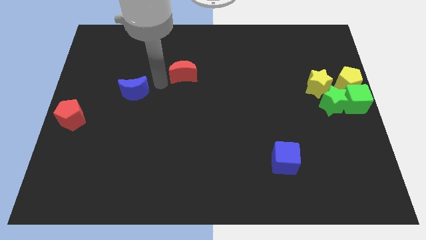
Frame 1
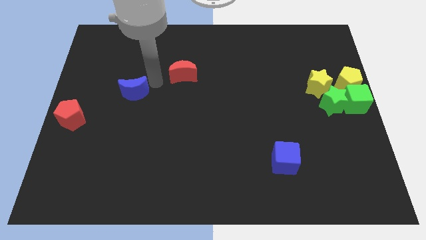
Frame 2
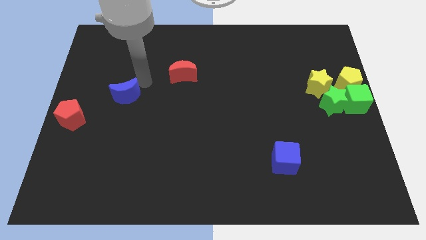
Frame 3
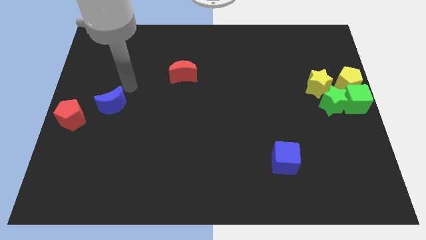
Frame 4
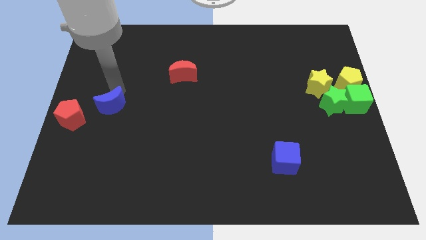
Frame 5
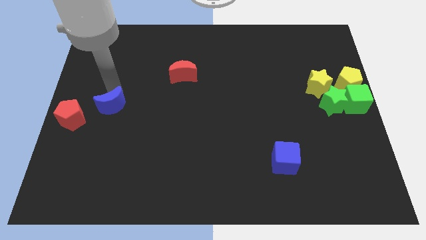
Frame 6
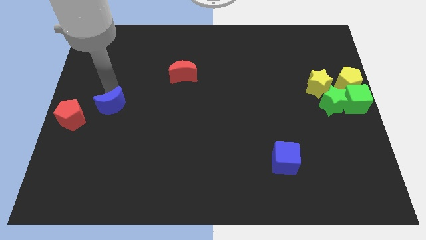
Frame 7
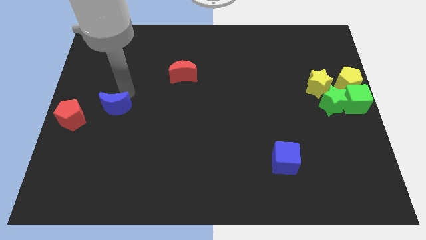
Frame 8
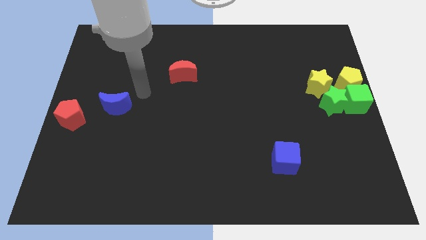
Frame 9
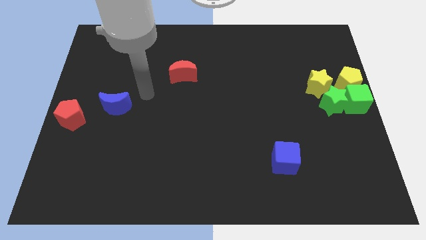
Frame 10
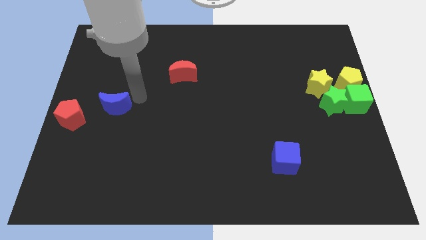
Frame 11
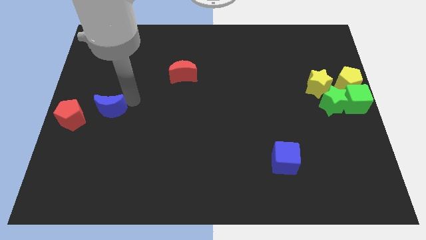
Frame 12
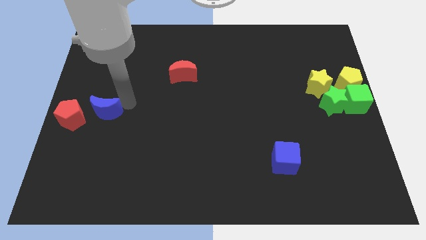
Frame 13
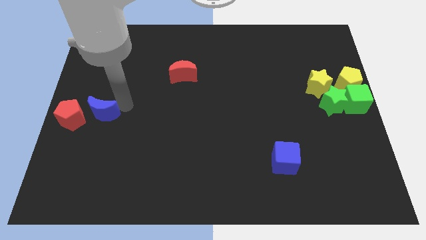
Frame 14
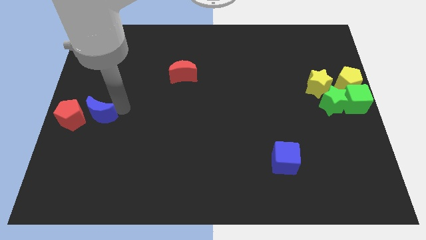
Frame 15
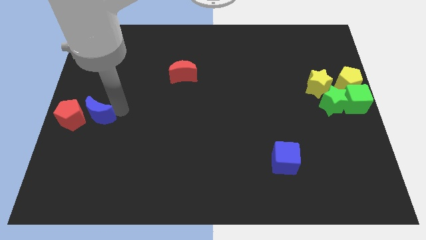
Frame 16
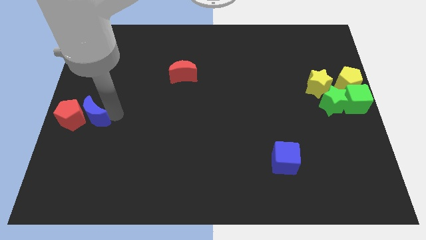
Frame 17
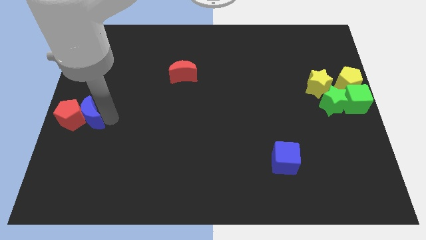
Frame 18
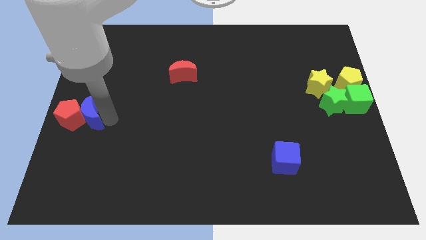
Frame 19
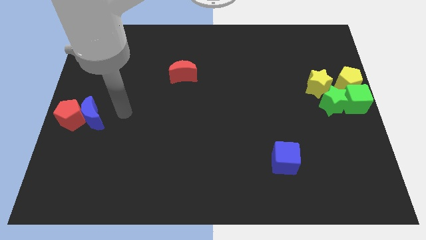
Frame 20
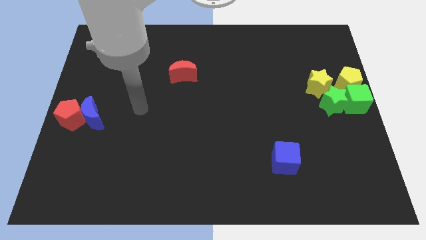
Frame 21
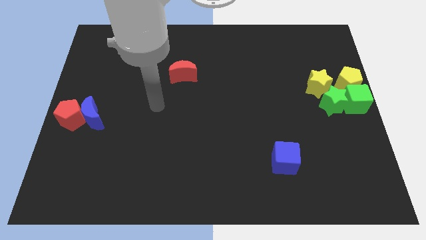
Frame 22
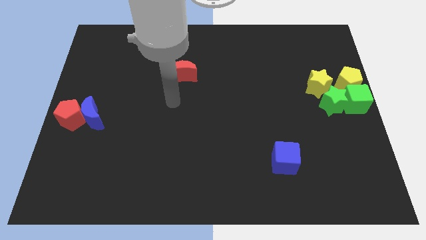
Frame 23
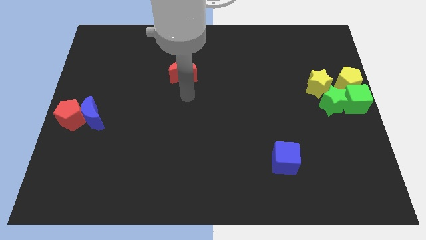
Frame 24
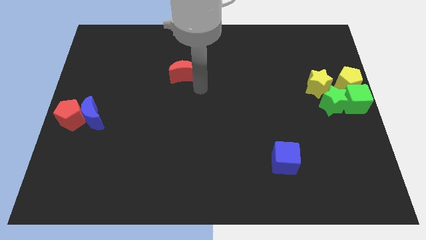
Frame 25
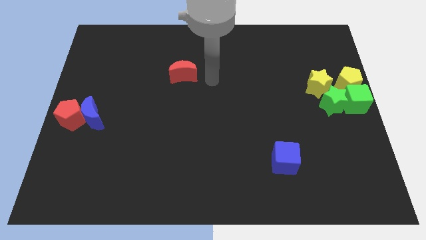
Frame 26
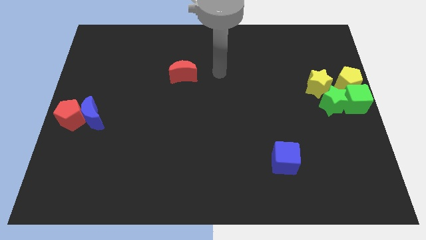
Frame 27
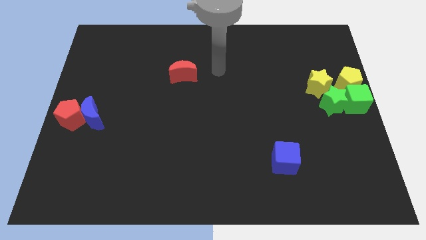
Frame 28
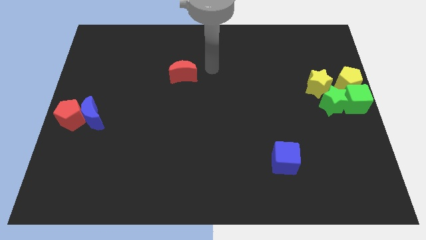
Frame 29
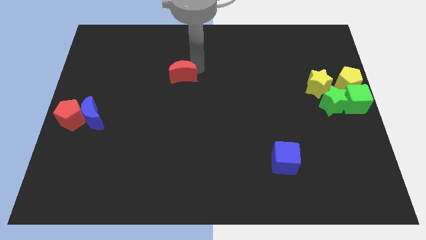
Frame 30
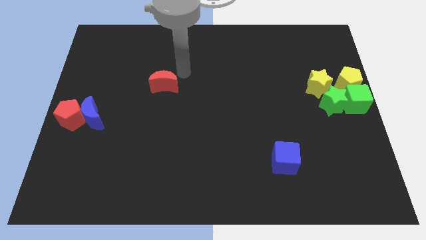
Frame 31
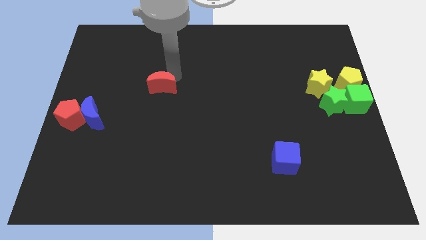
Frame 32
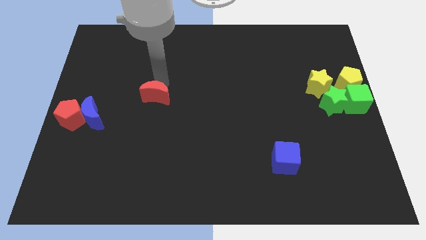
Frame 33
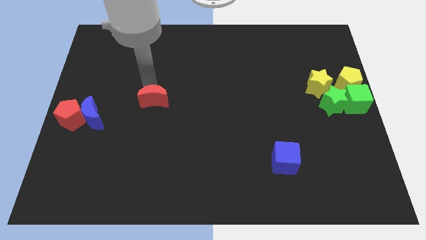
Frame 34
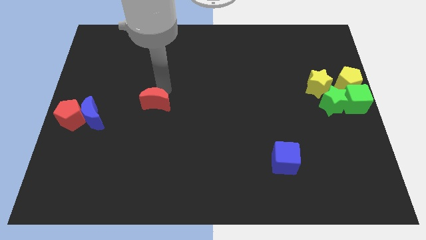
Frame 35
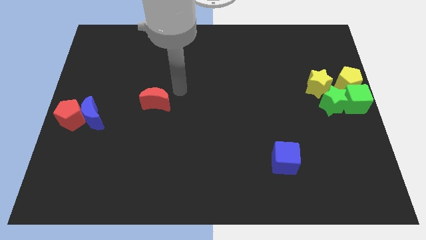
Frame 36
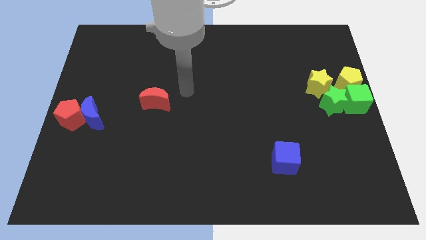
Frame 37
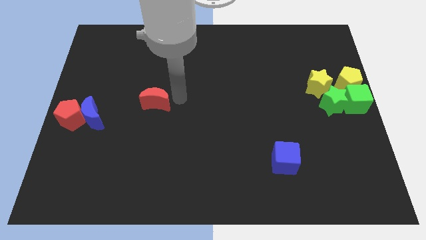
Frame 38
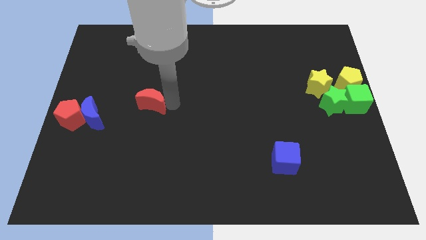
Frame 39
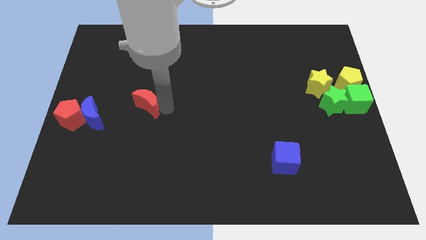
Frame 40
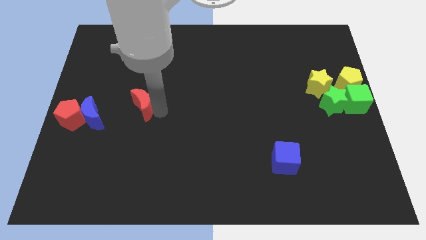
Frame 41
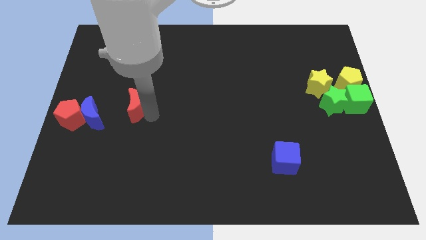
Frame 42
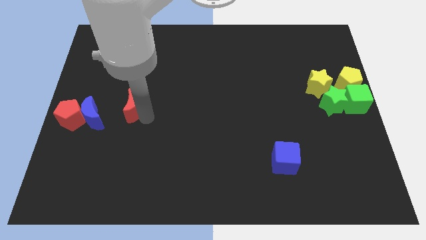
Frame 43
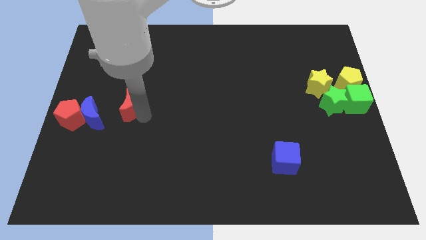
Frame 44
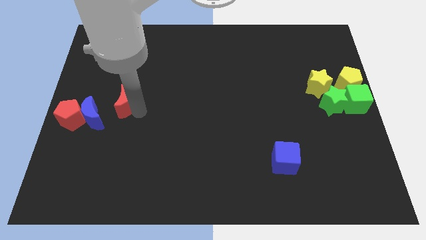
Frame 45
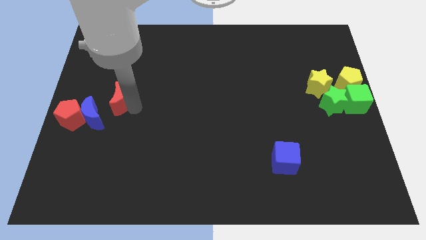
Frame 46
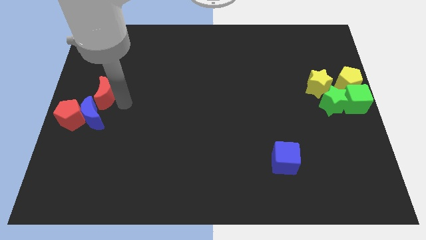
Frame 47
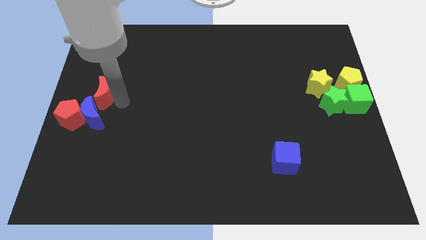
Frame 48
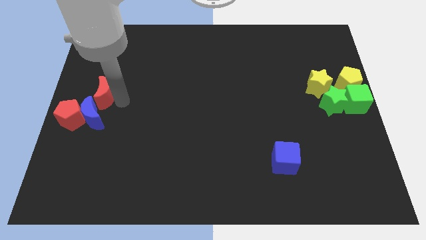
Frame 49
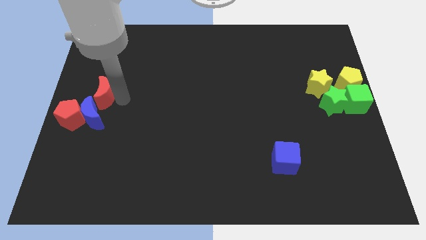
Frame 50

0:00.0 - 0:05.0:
push the moons towards the center left side of the board

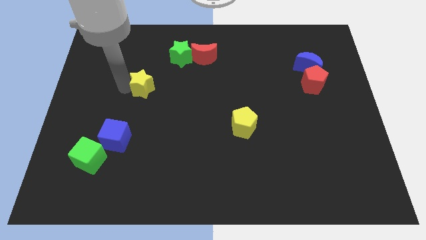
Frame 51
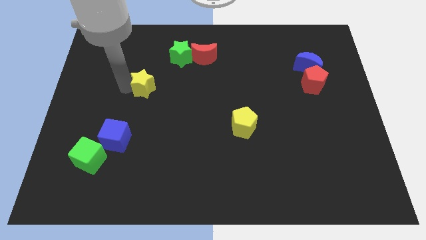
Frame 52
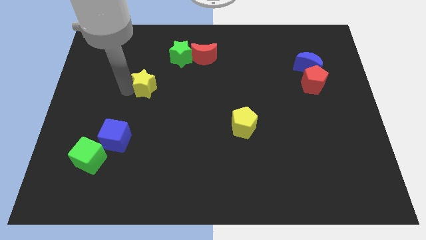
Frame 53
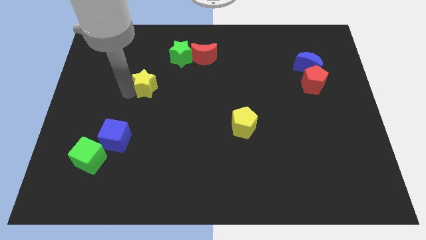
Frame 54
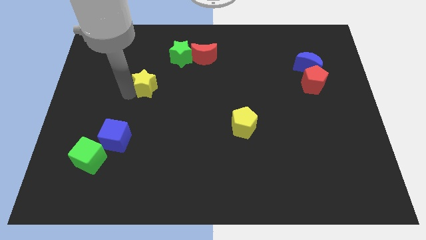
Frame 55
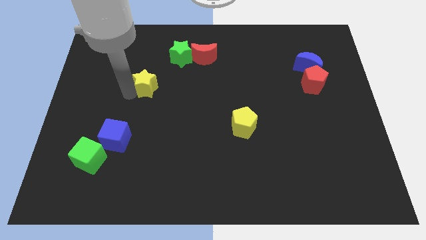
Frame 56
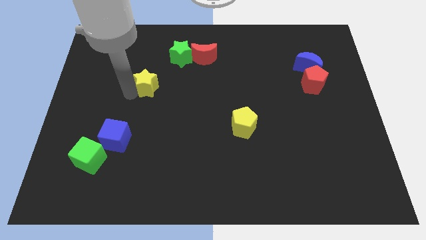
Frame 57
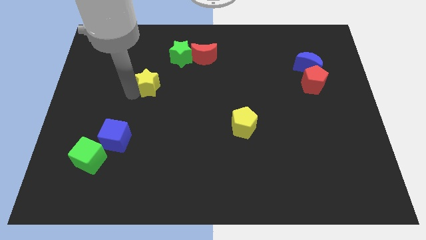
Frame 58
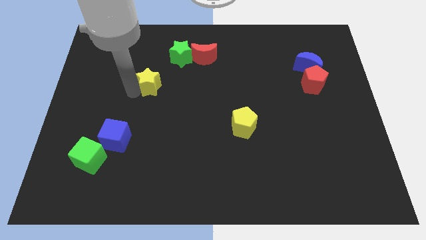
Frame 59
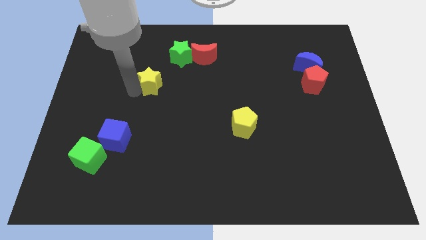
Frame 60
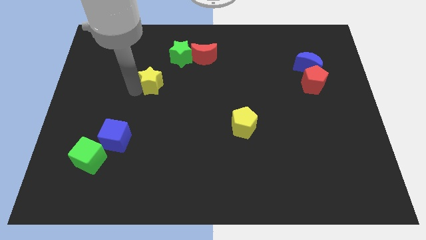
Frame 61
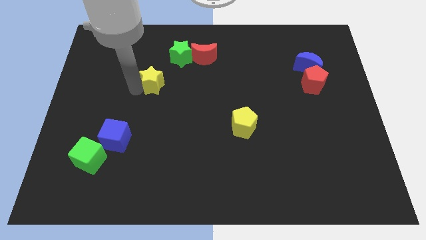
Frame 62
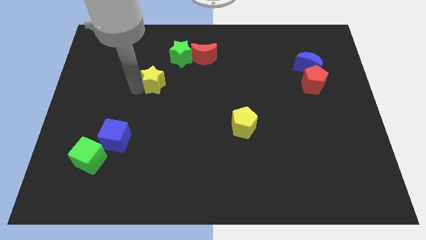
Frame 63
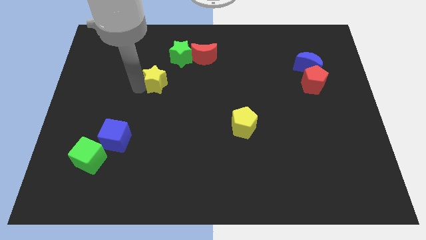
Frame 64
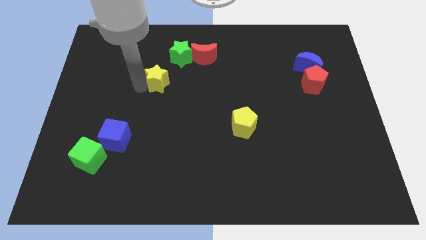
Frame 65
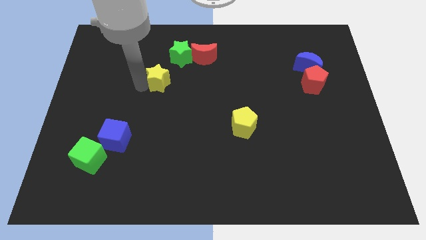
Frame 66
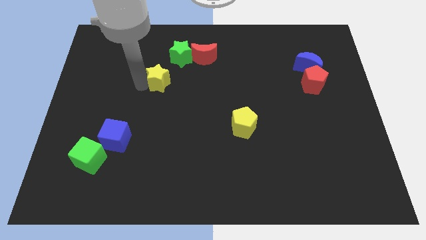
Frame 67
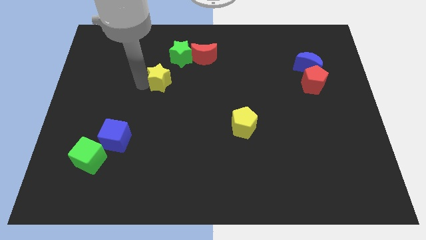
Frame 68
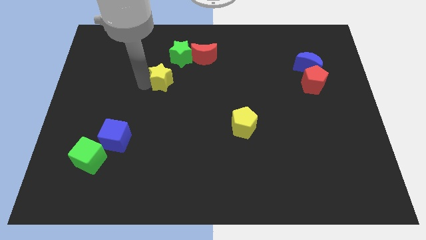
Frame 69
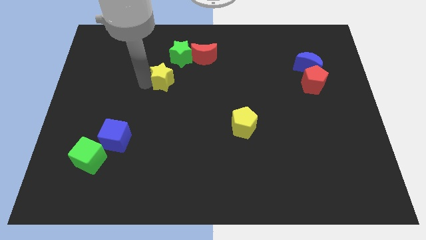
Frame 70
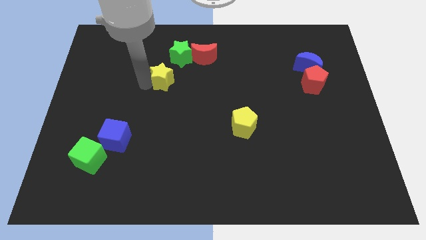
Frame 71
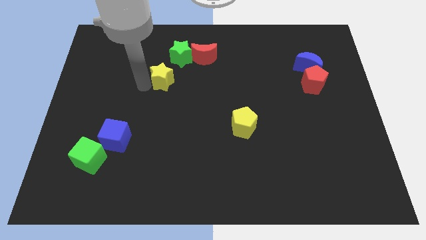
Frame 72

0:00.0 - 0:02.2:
push the yellow star towards the green star

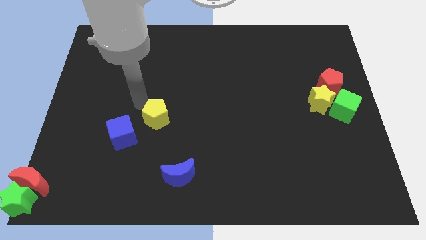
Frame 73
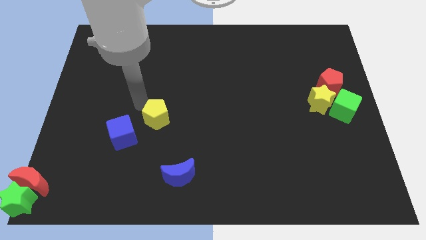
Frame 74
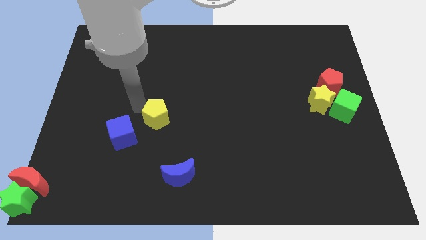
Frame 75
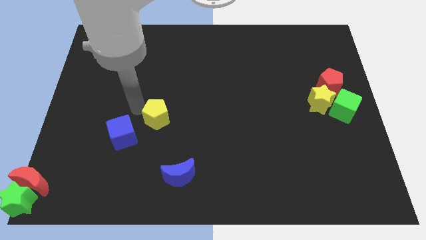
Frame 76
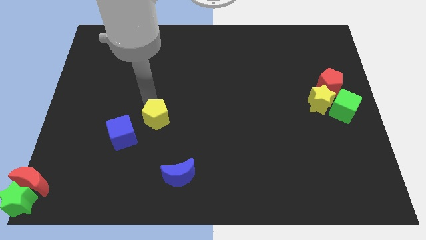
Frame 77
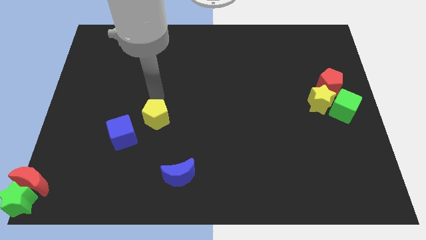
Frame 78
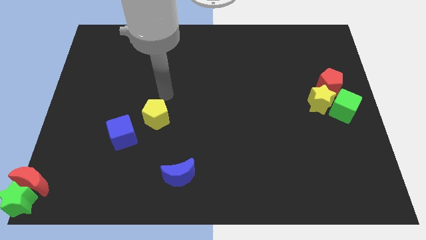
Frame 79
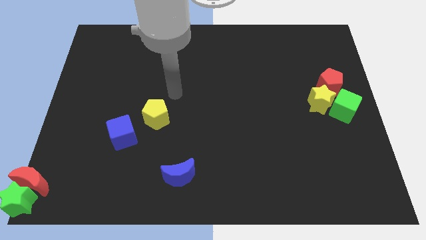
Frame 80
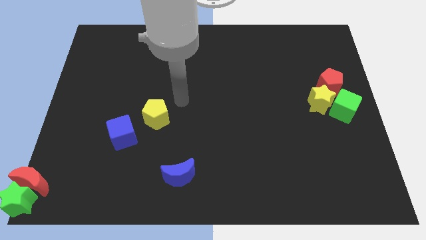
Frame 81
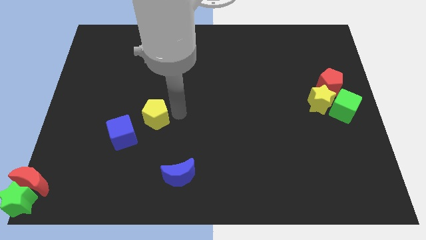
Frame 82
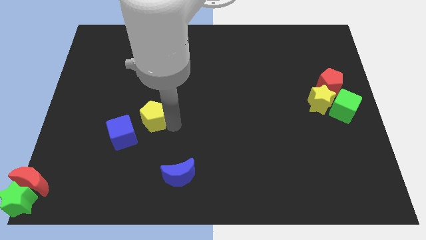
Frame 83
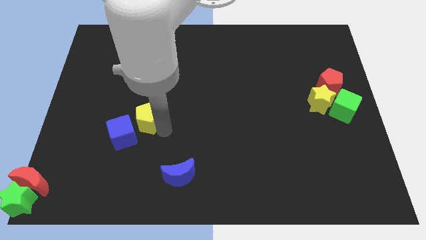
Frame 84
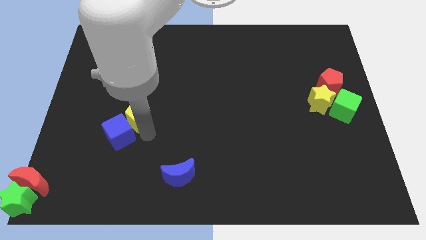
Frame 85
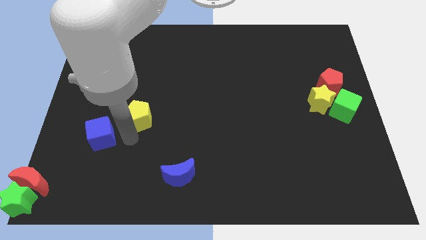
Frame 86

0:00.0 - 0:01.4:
push yellow pentagon towards blue cube

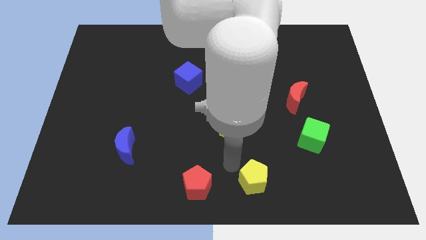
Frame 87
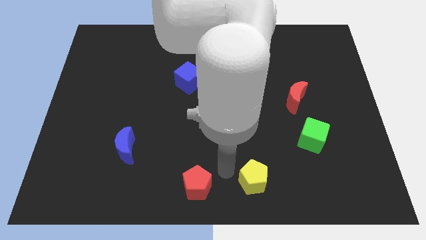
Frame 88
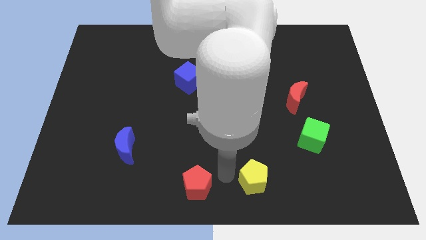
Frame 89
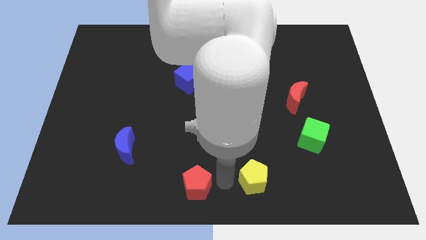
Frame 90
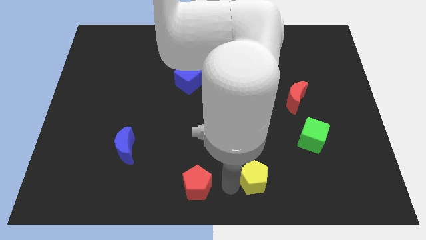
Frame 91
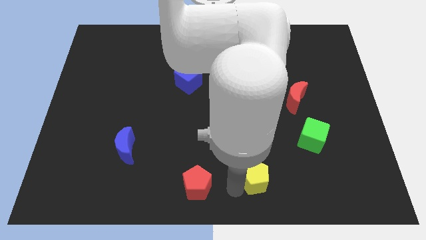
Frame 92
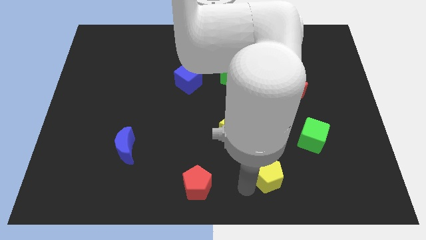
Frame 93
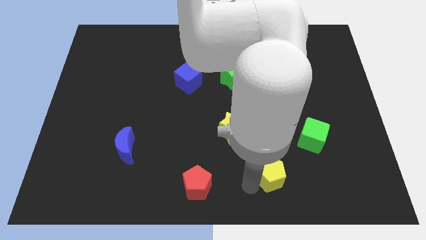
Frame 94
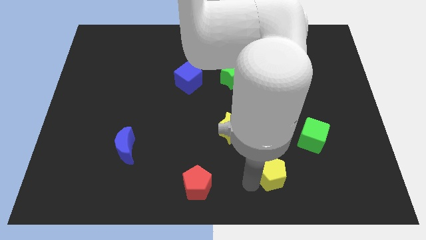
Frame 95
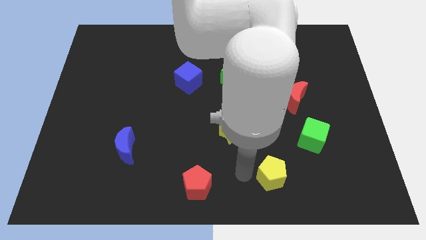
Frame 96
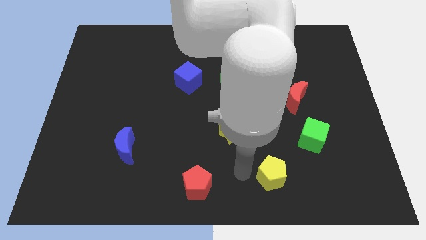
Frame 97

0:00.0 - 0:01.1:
push the yellow pentagon slightly to the right
